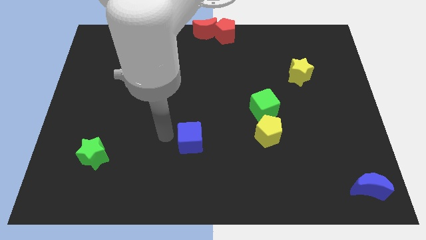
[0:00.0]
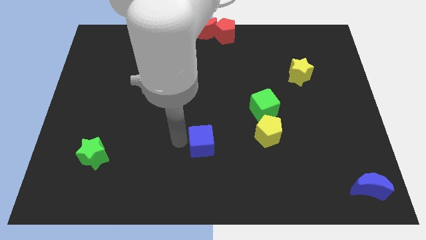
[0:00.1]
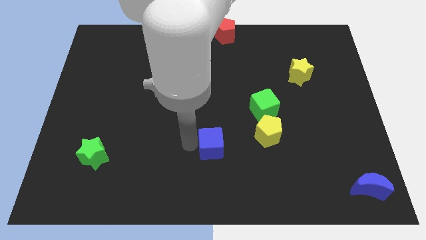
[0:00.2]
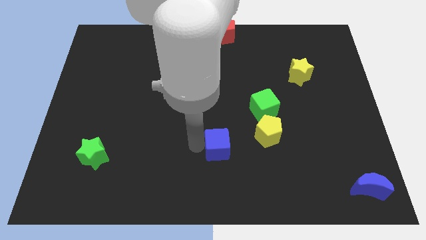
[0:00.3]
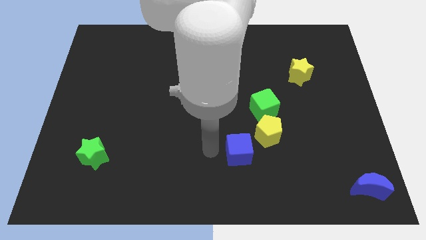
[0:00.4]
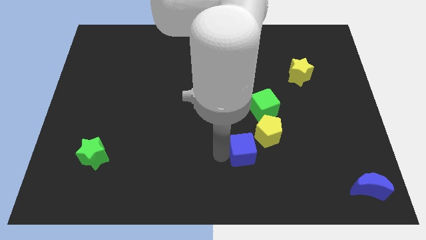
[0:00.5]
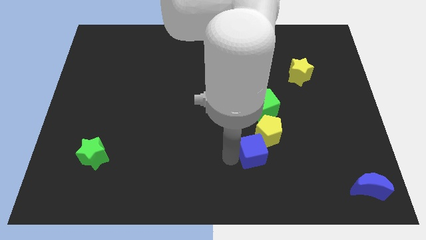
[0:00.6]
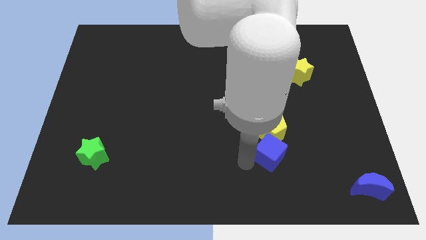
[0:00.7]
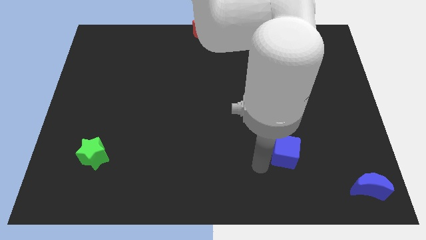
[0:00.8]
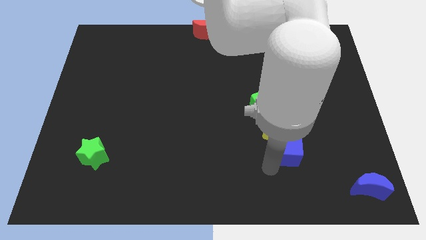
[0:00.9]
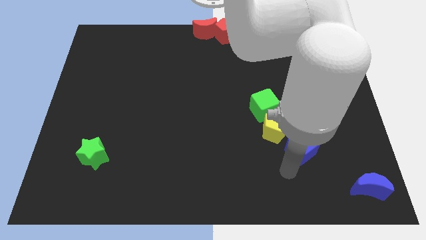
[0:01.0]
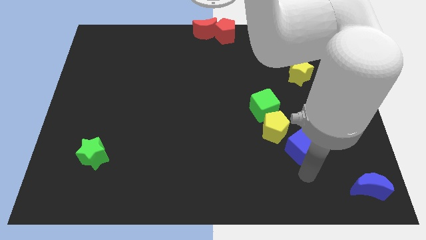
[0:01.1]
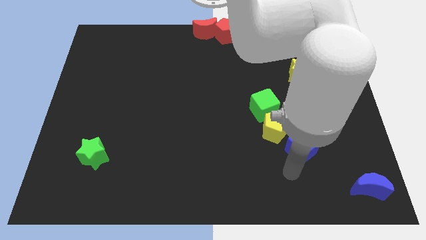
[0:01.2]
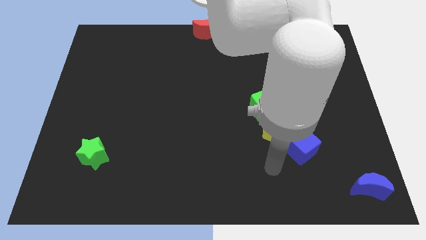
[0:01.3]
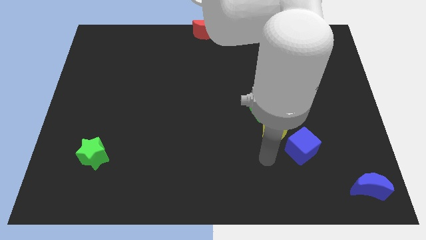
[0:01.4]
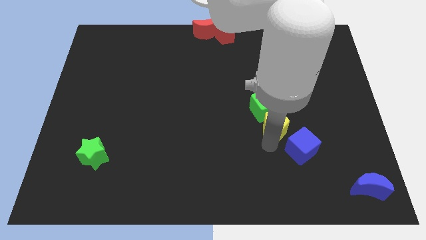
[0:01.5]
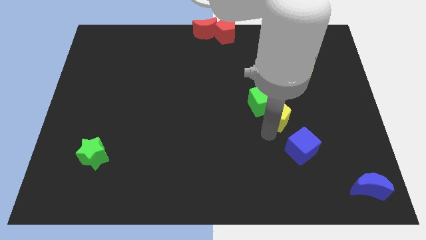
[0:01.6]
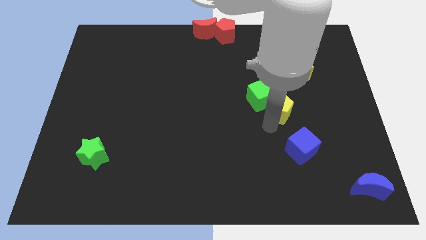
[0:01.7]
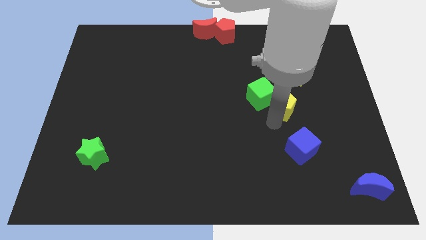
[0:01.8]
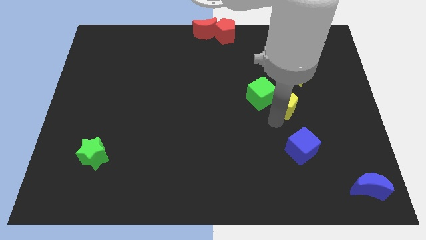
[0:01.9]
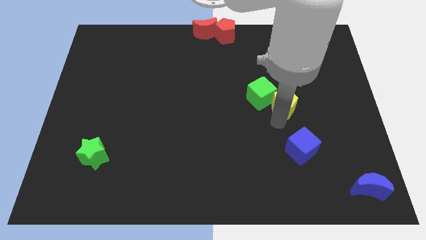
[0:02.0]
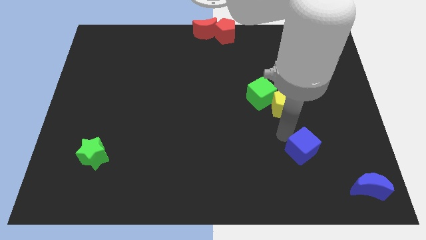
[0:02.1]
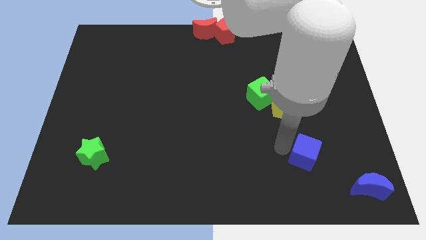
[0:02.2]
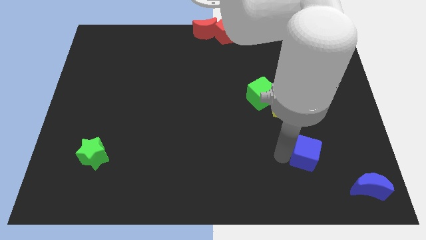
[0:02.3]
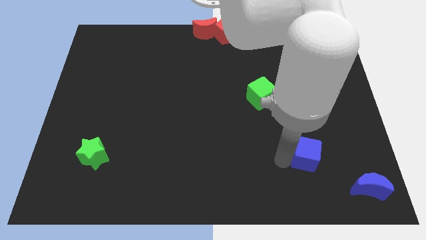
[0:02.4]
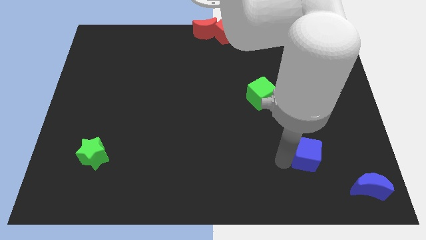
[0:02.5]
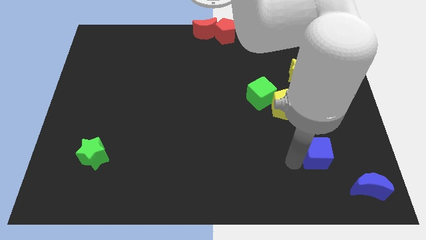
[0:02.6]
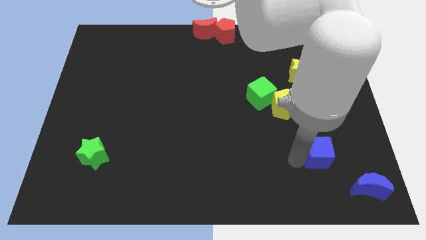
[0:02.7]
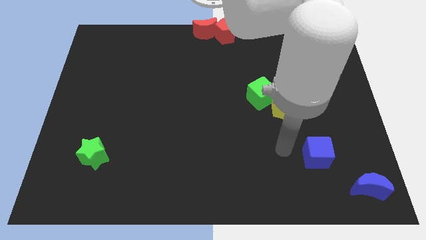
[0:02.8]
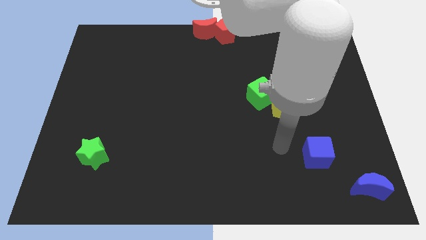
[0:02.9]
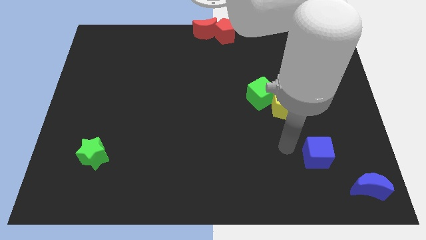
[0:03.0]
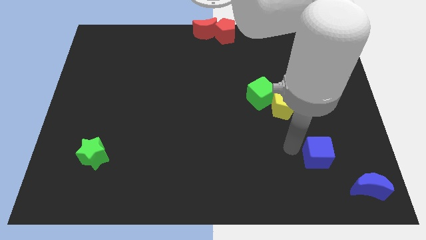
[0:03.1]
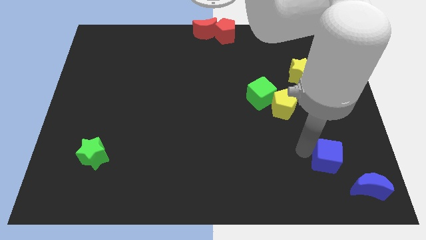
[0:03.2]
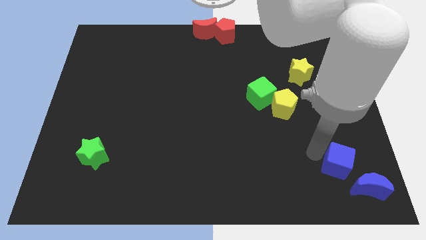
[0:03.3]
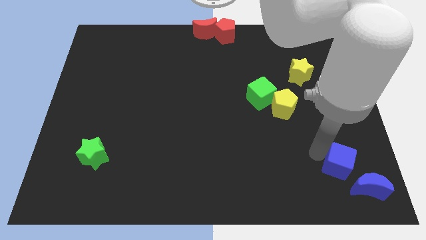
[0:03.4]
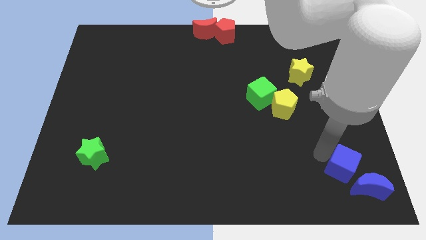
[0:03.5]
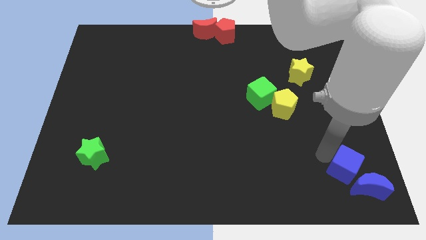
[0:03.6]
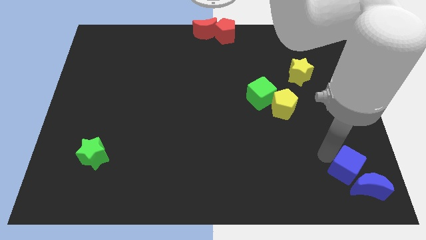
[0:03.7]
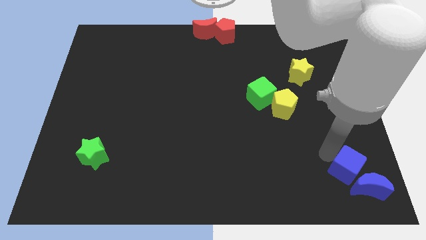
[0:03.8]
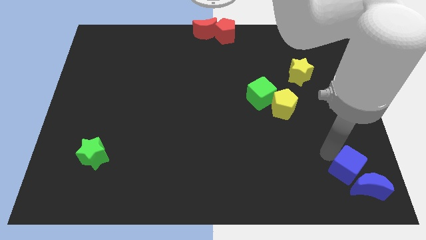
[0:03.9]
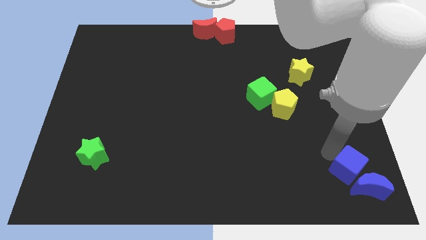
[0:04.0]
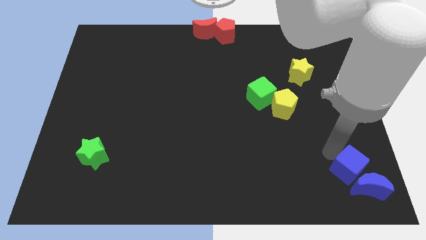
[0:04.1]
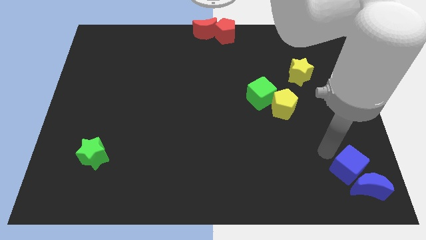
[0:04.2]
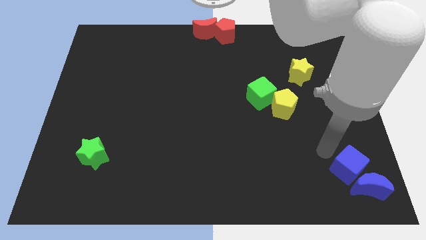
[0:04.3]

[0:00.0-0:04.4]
place the blue cube diagonally top left to blue moon

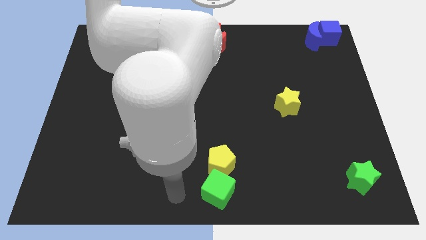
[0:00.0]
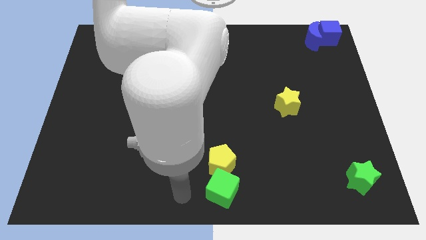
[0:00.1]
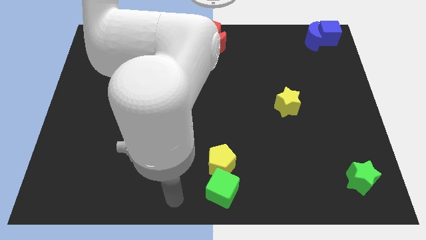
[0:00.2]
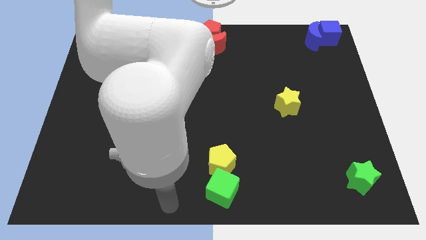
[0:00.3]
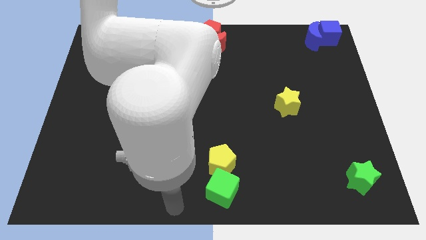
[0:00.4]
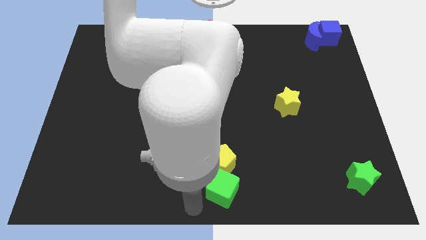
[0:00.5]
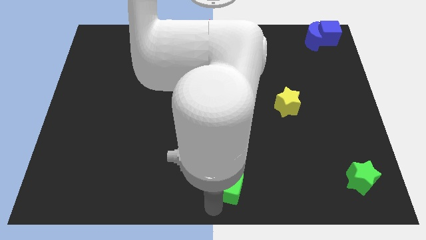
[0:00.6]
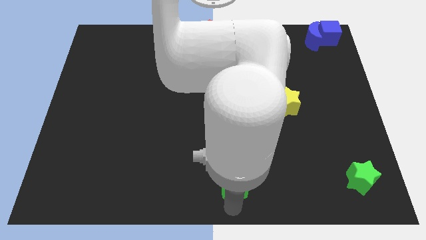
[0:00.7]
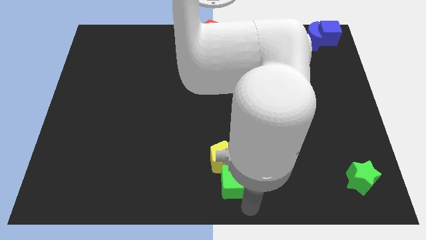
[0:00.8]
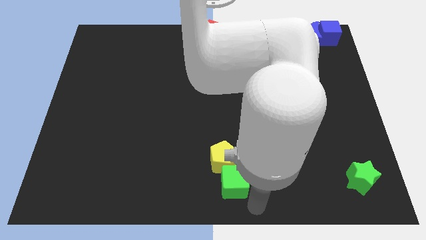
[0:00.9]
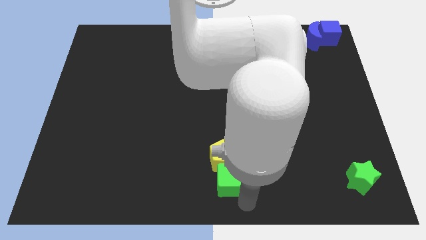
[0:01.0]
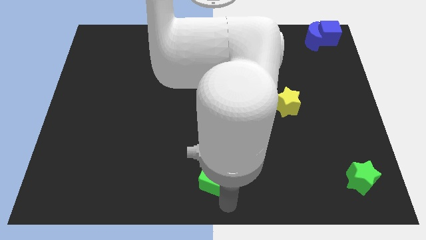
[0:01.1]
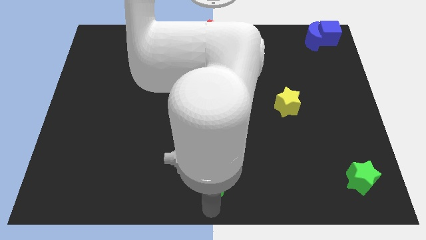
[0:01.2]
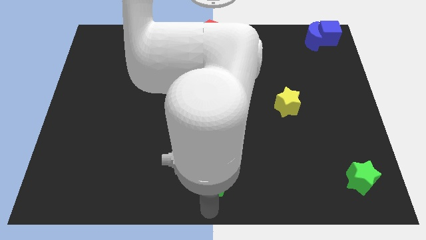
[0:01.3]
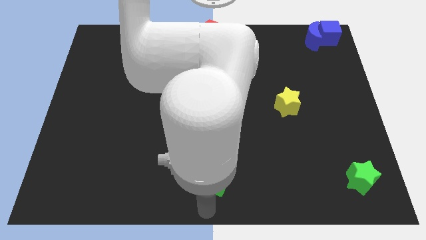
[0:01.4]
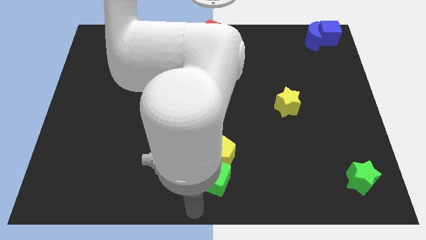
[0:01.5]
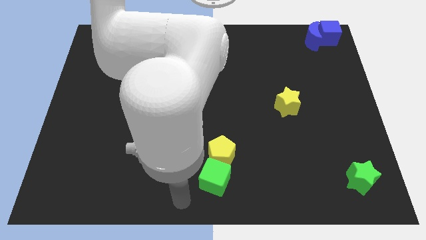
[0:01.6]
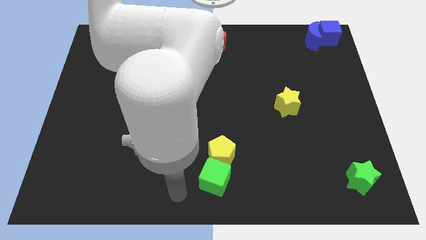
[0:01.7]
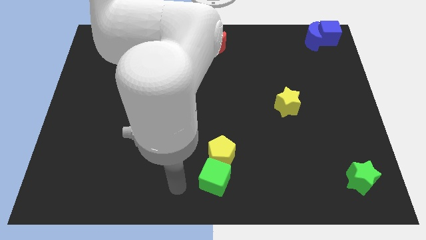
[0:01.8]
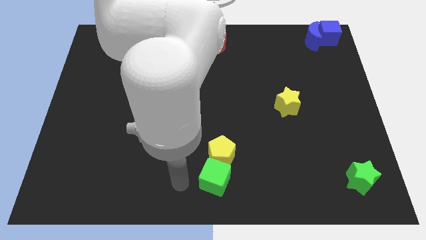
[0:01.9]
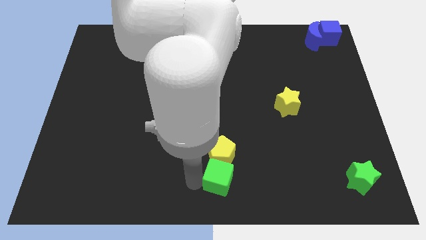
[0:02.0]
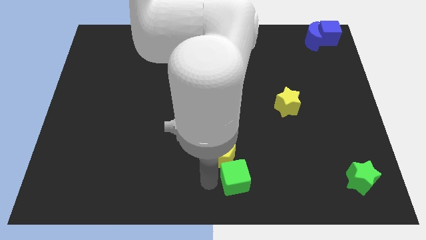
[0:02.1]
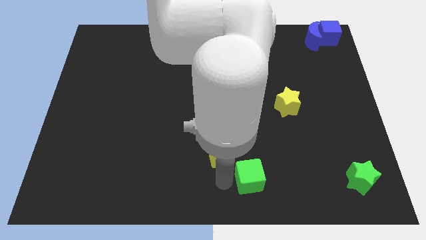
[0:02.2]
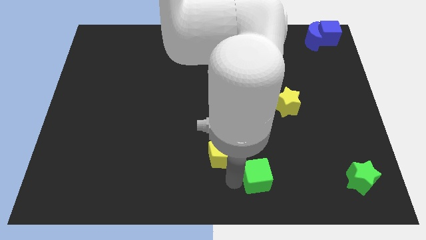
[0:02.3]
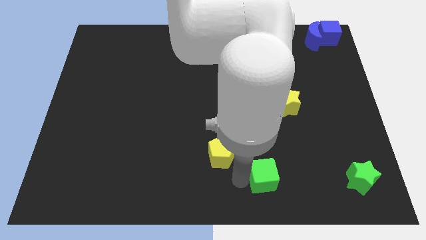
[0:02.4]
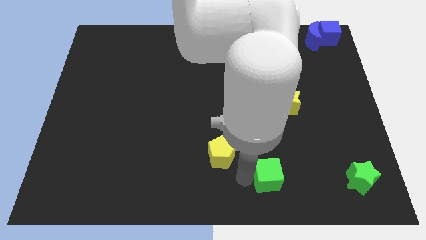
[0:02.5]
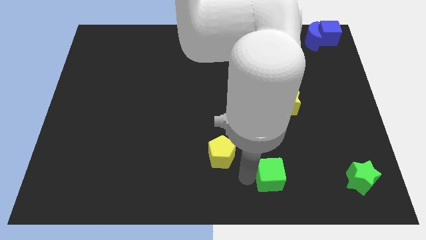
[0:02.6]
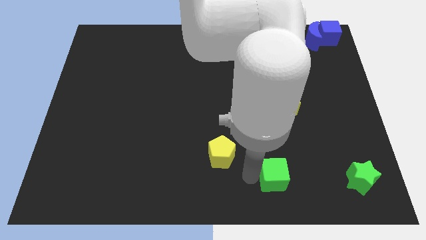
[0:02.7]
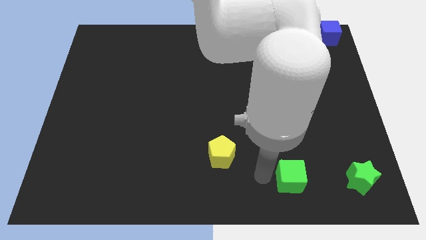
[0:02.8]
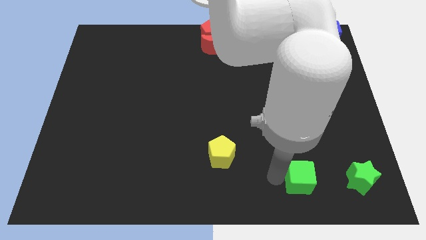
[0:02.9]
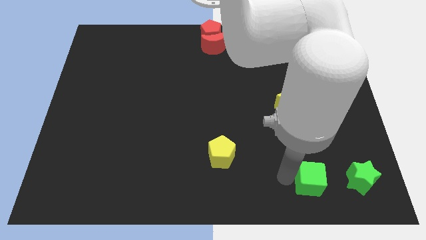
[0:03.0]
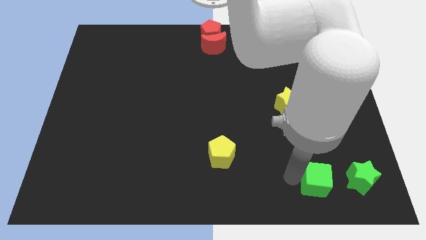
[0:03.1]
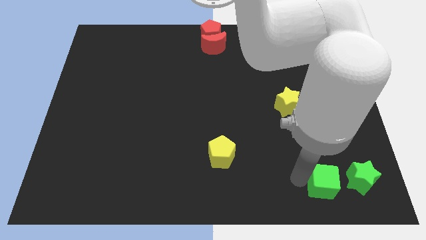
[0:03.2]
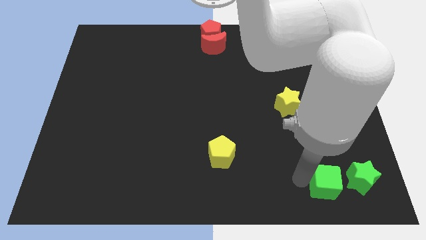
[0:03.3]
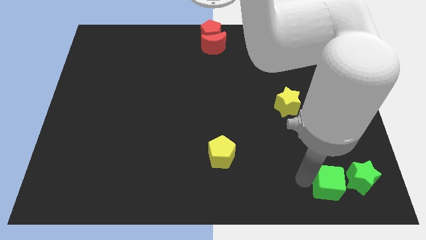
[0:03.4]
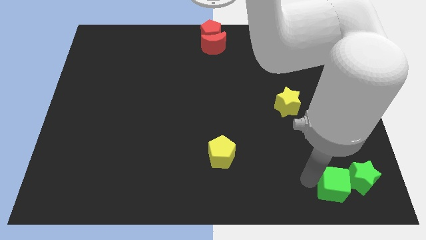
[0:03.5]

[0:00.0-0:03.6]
push the green cube left to the green star

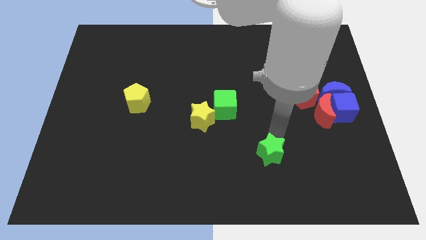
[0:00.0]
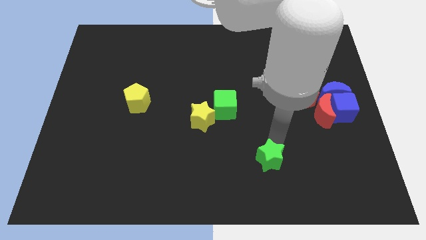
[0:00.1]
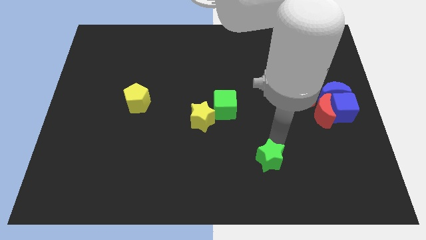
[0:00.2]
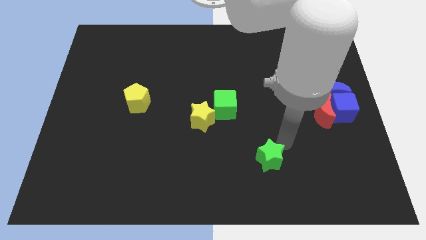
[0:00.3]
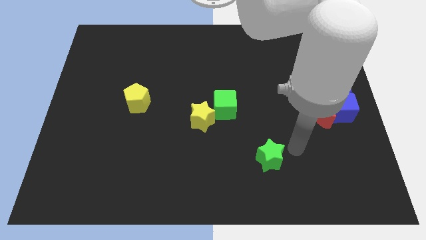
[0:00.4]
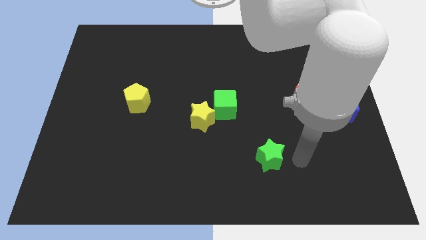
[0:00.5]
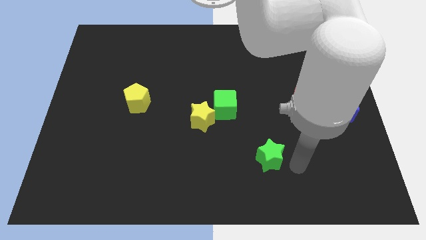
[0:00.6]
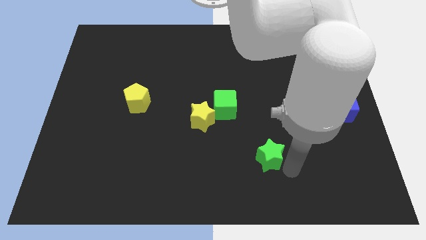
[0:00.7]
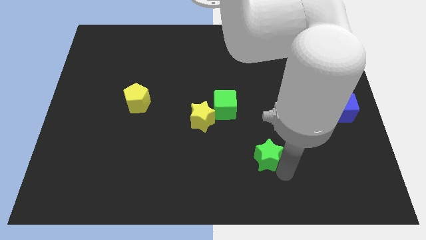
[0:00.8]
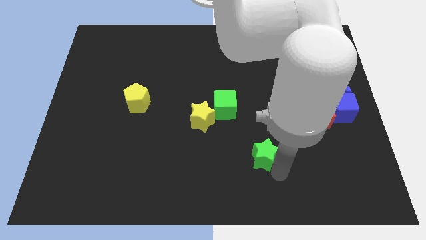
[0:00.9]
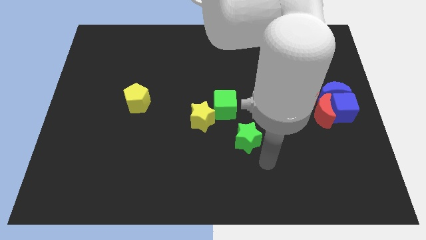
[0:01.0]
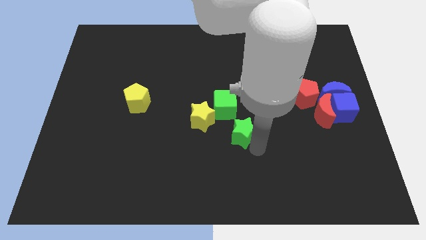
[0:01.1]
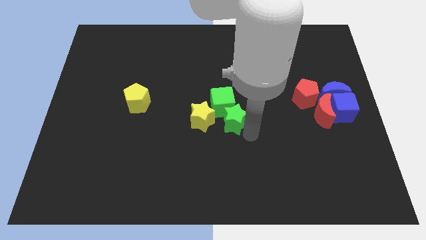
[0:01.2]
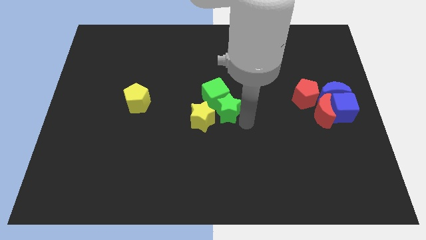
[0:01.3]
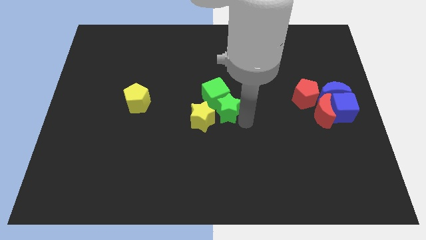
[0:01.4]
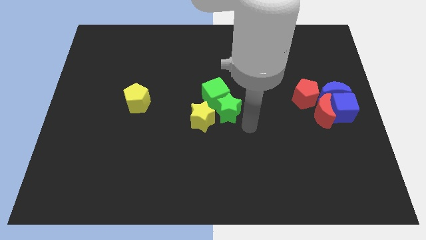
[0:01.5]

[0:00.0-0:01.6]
push the green star into the green cube
